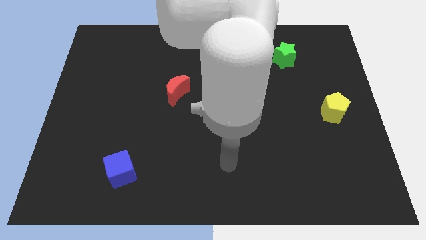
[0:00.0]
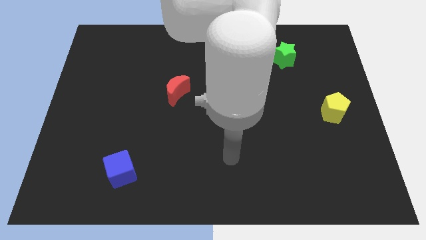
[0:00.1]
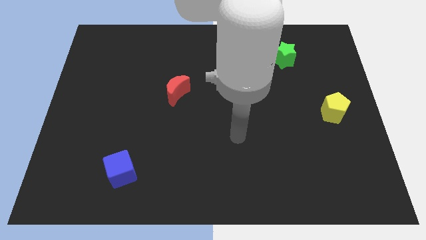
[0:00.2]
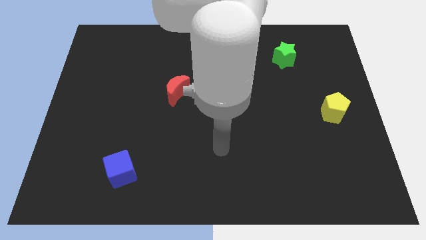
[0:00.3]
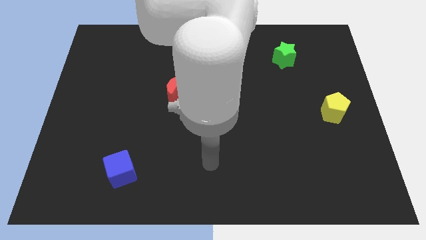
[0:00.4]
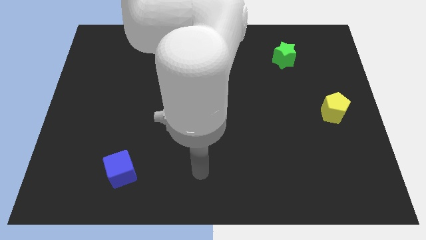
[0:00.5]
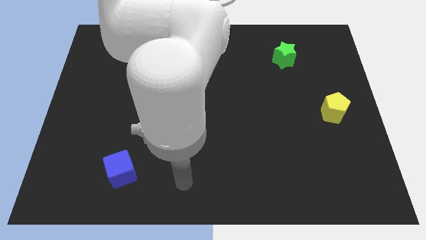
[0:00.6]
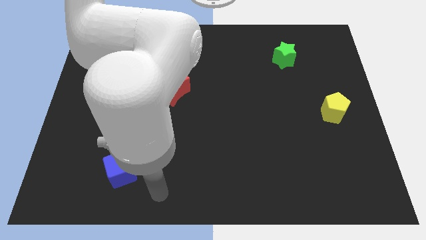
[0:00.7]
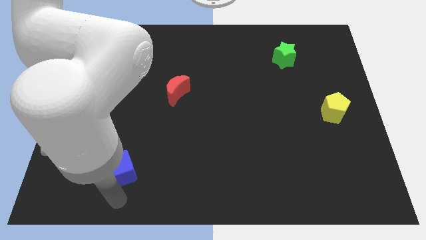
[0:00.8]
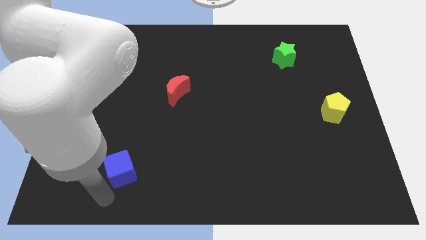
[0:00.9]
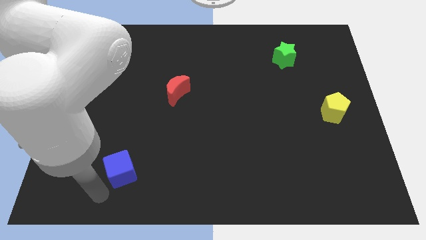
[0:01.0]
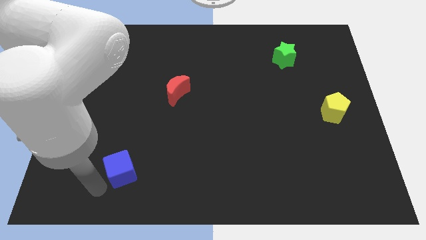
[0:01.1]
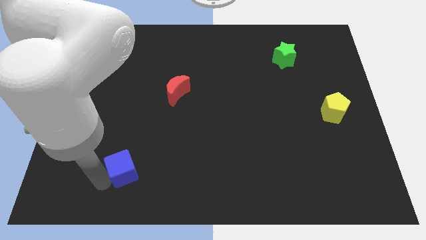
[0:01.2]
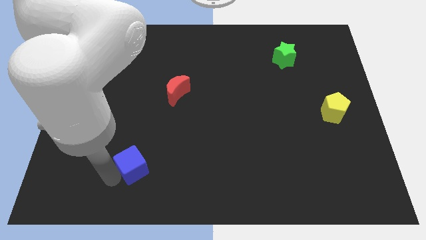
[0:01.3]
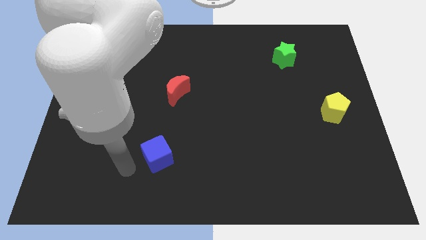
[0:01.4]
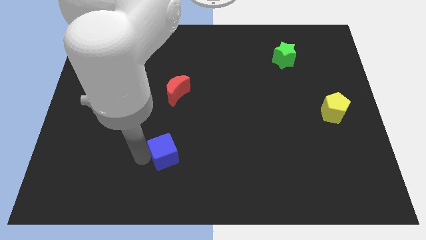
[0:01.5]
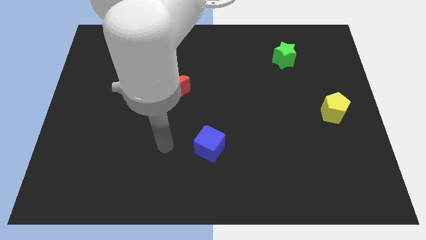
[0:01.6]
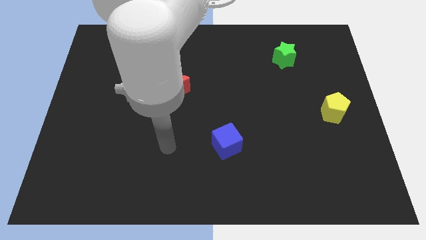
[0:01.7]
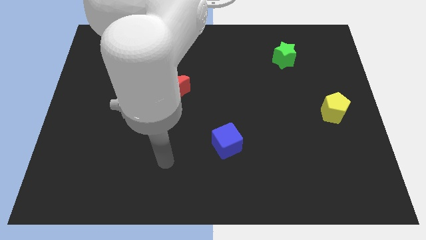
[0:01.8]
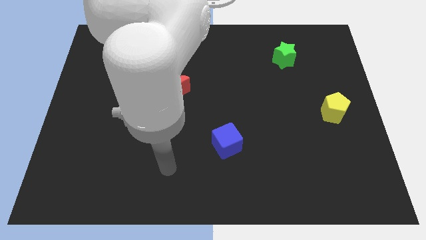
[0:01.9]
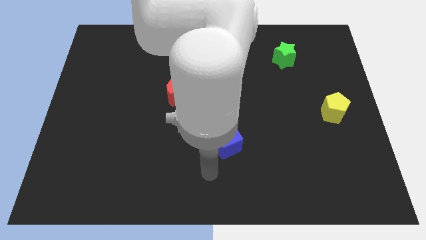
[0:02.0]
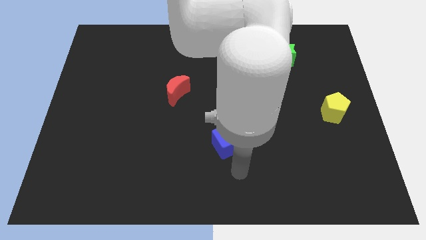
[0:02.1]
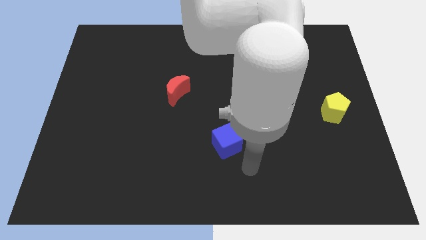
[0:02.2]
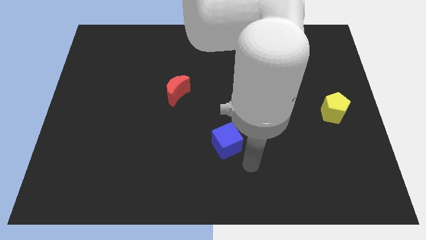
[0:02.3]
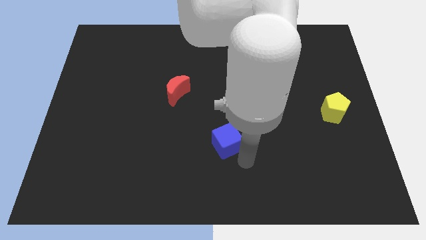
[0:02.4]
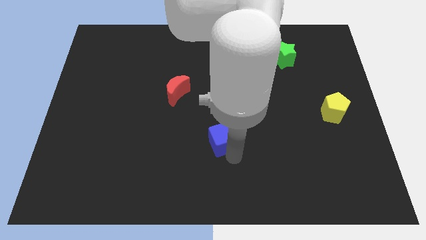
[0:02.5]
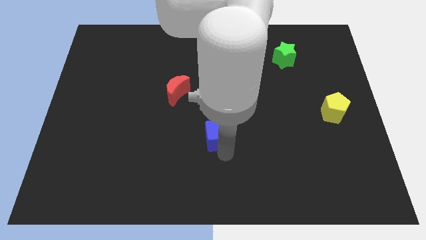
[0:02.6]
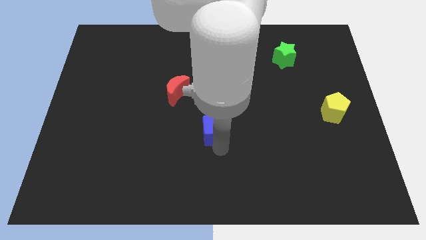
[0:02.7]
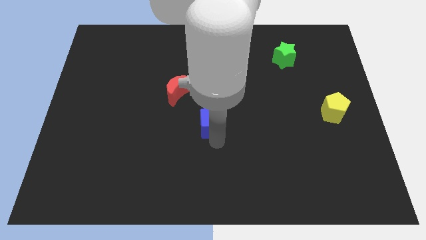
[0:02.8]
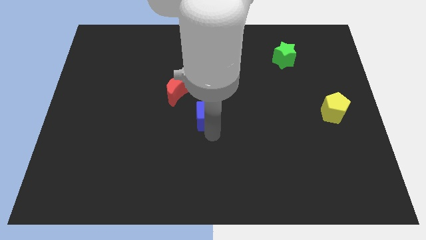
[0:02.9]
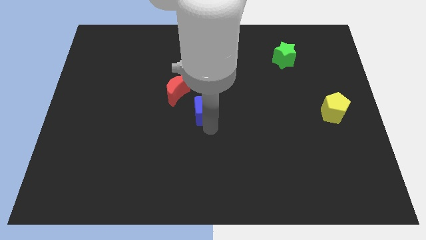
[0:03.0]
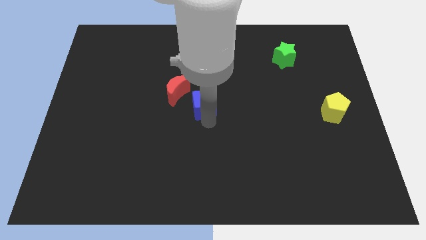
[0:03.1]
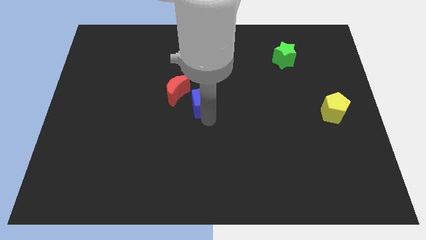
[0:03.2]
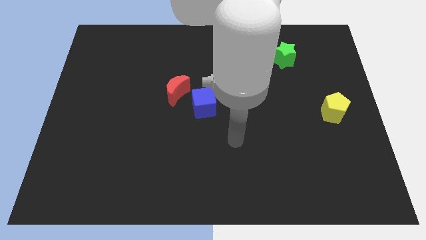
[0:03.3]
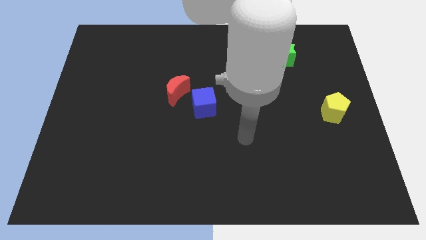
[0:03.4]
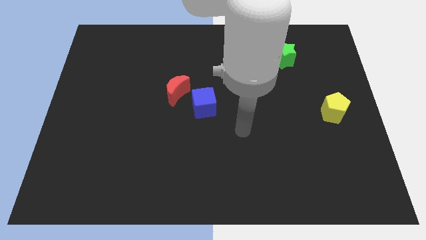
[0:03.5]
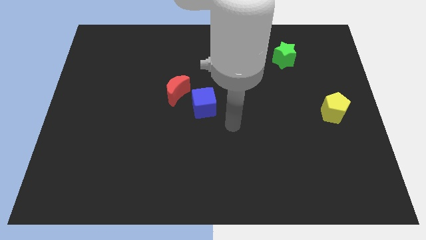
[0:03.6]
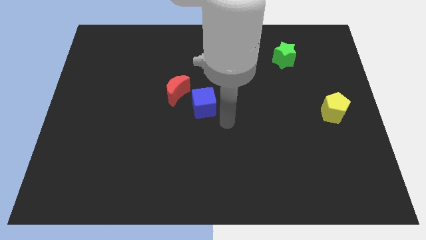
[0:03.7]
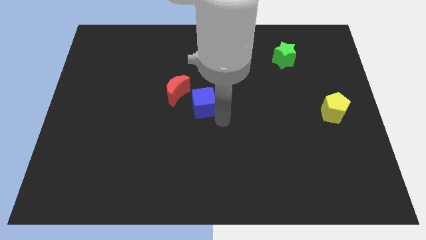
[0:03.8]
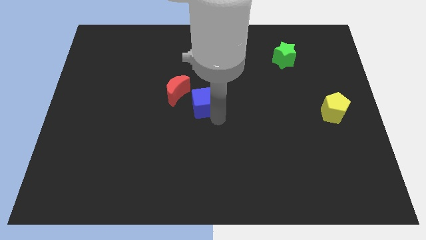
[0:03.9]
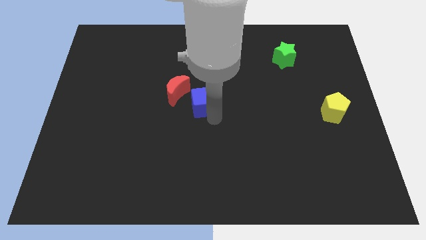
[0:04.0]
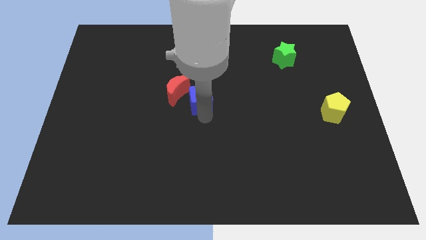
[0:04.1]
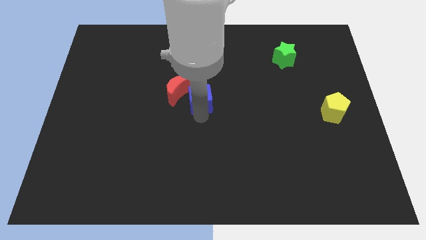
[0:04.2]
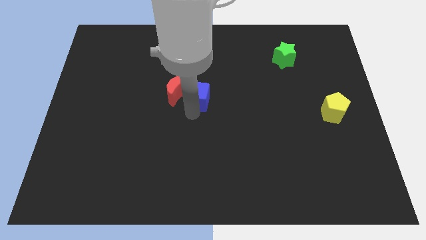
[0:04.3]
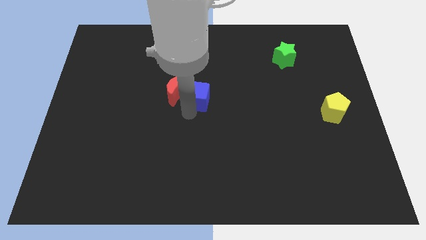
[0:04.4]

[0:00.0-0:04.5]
put the blue block close to the red moon

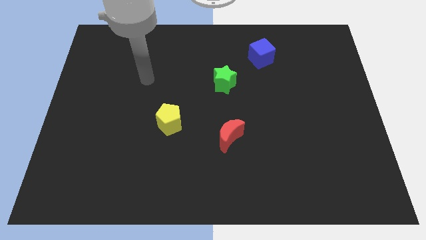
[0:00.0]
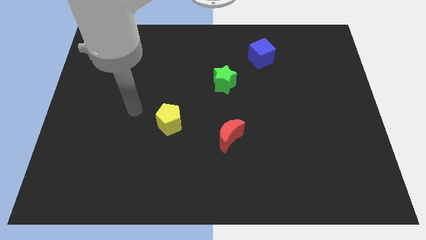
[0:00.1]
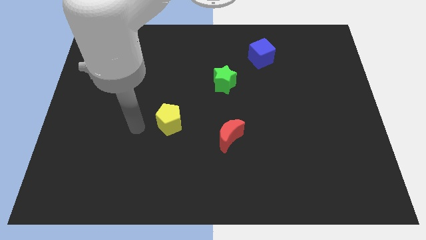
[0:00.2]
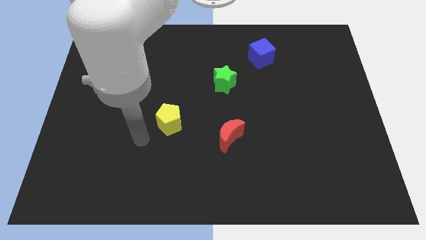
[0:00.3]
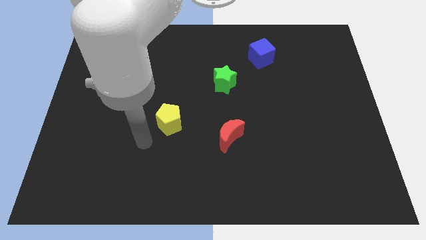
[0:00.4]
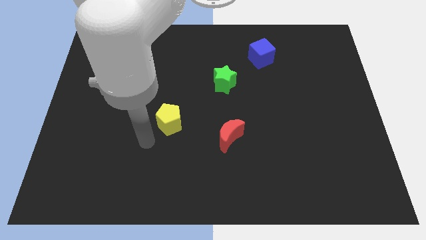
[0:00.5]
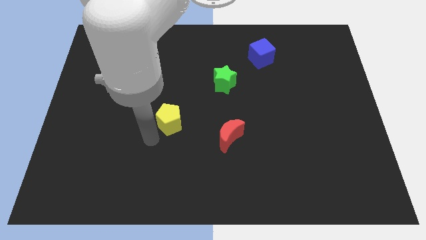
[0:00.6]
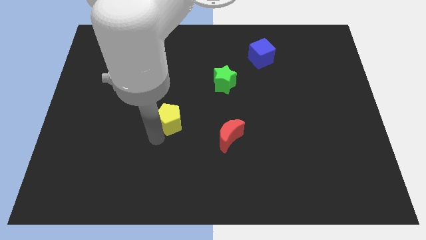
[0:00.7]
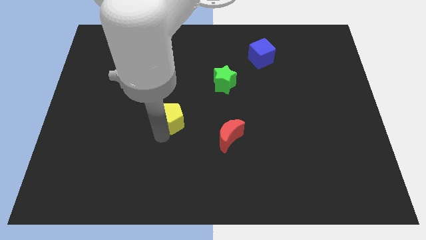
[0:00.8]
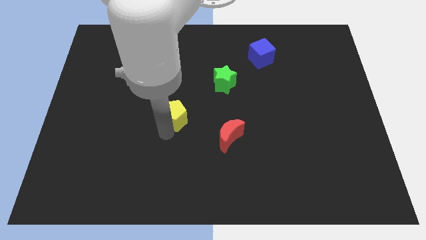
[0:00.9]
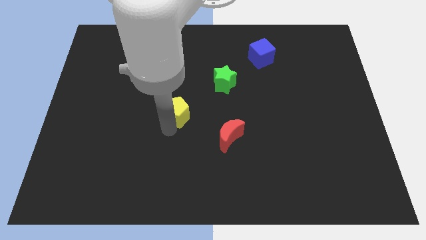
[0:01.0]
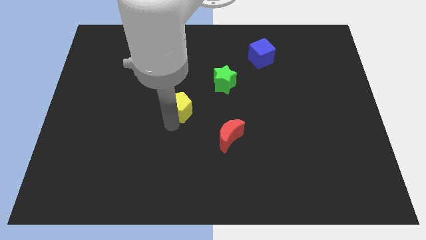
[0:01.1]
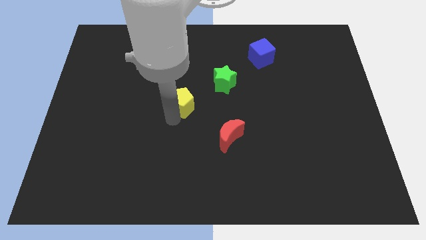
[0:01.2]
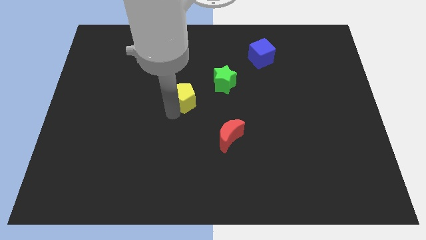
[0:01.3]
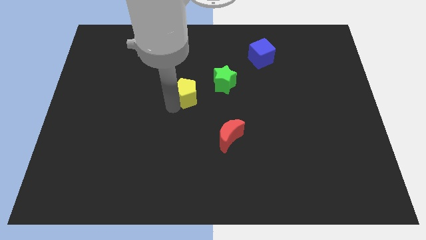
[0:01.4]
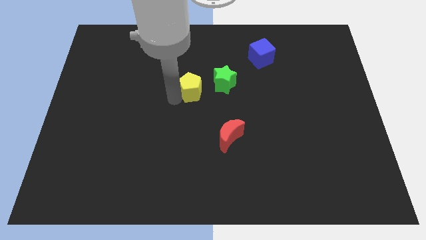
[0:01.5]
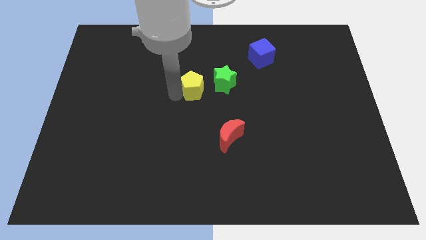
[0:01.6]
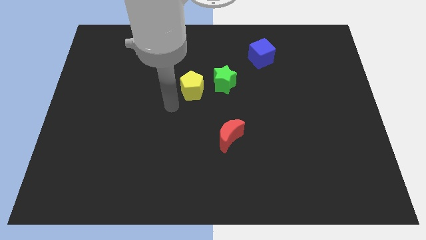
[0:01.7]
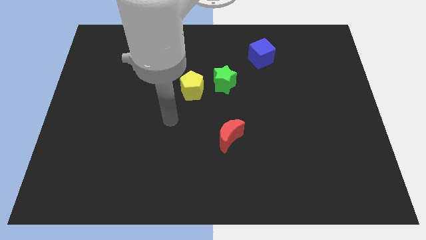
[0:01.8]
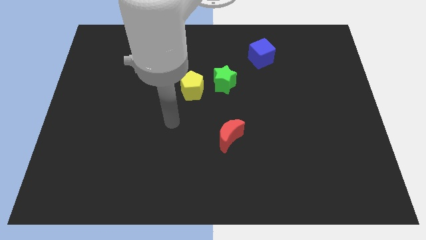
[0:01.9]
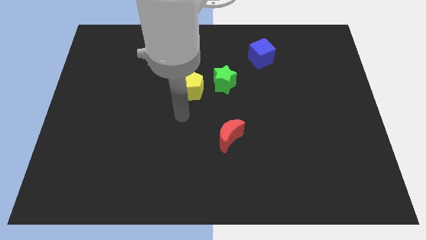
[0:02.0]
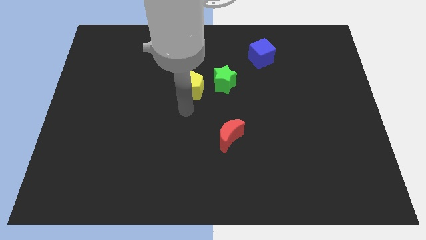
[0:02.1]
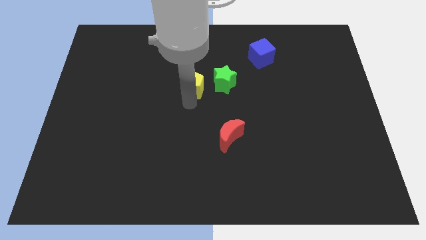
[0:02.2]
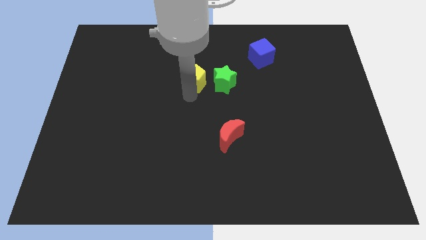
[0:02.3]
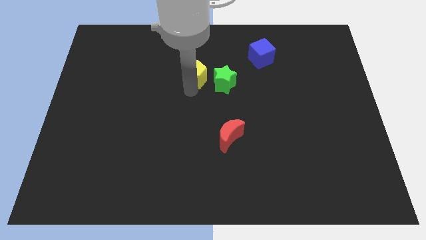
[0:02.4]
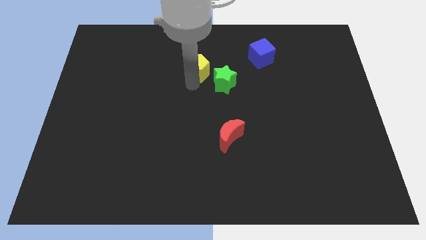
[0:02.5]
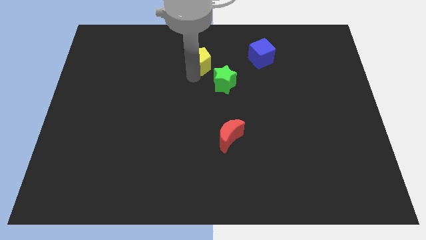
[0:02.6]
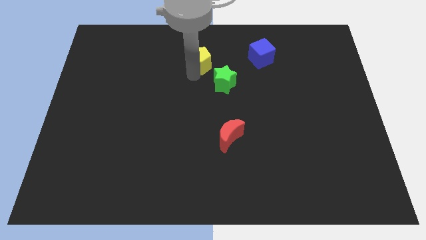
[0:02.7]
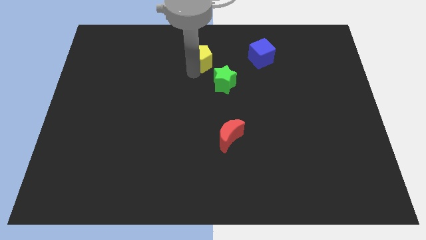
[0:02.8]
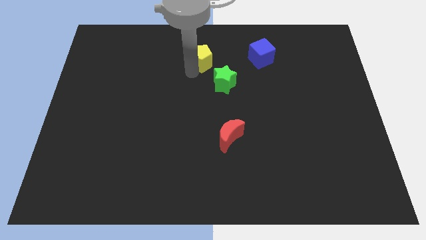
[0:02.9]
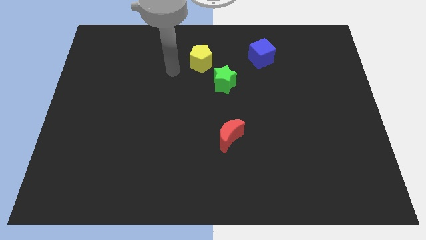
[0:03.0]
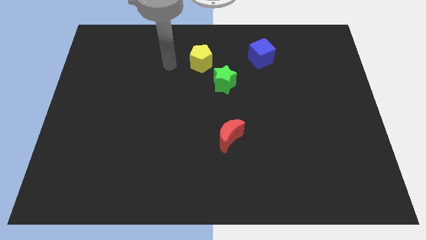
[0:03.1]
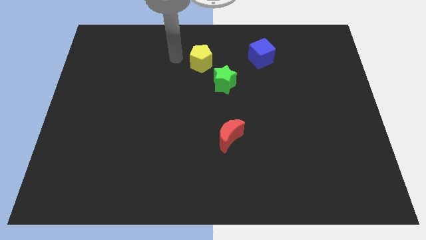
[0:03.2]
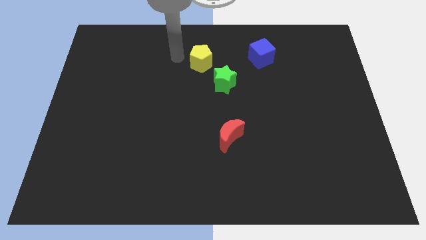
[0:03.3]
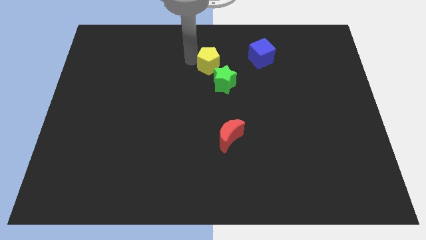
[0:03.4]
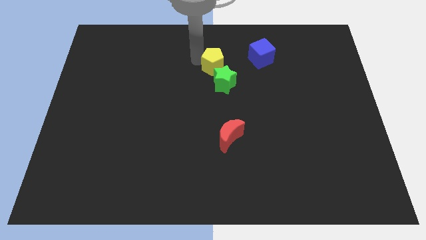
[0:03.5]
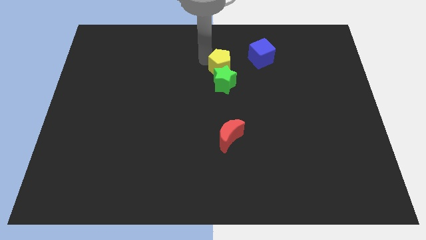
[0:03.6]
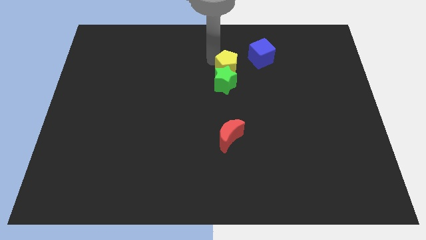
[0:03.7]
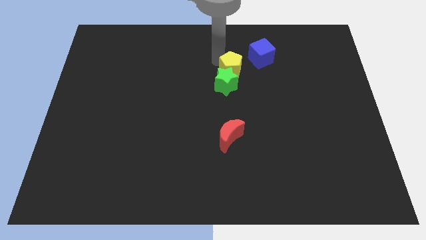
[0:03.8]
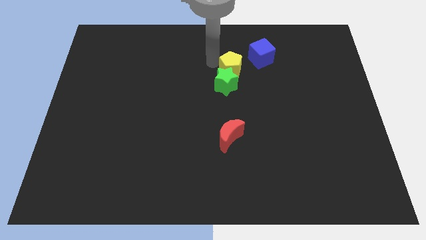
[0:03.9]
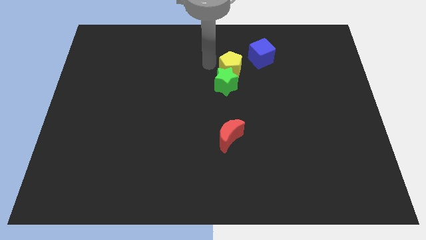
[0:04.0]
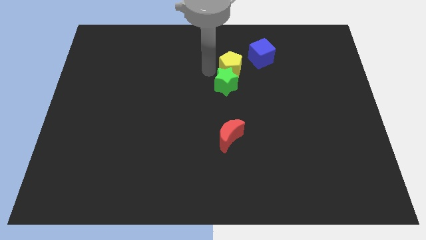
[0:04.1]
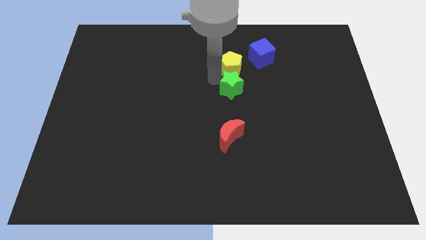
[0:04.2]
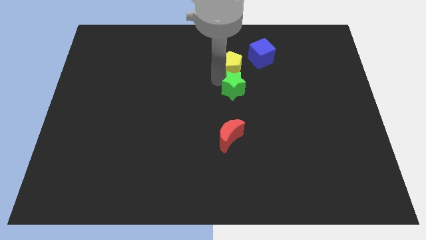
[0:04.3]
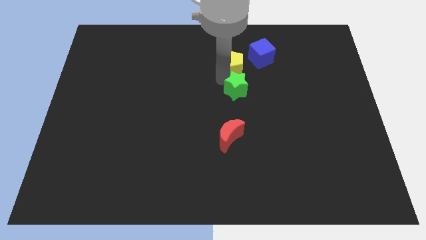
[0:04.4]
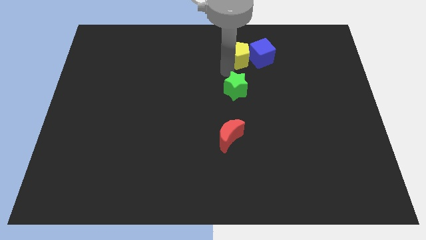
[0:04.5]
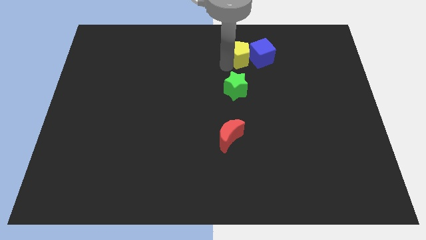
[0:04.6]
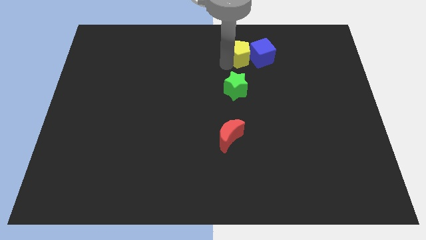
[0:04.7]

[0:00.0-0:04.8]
move the yellow block to the blue block
